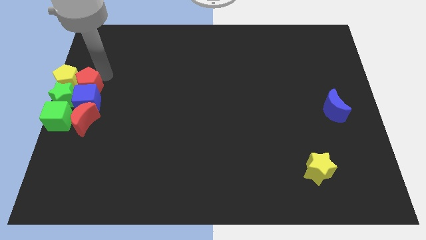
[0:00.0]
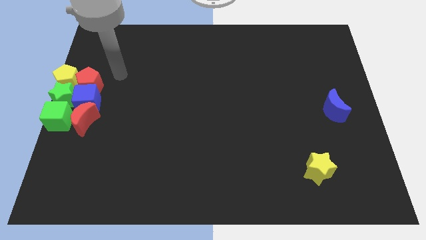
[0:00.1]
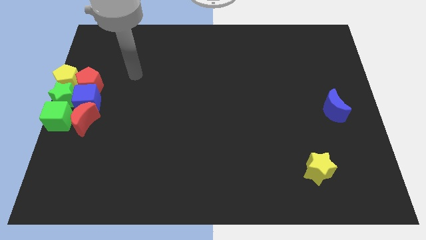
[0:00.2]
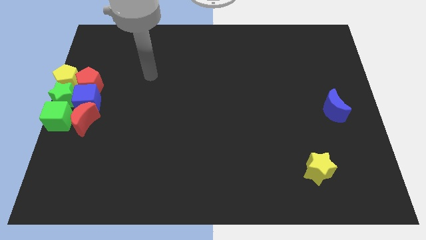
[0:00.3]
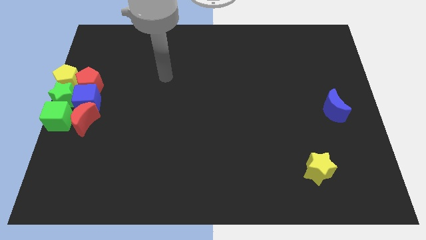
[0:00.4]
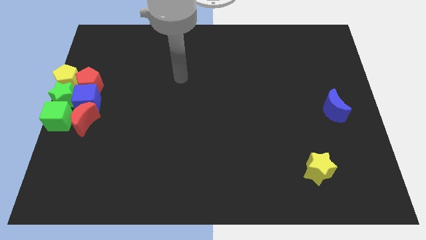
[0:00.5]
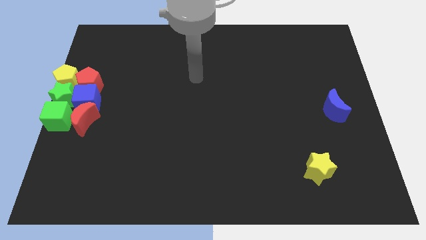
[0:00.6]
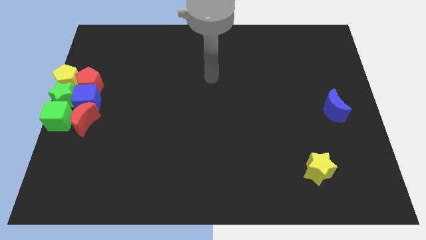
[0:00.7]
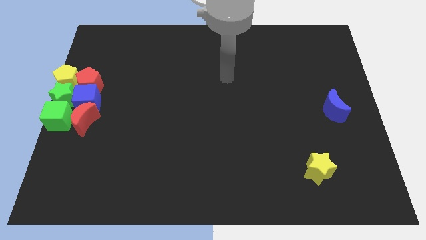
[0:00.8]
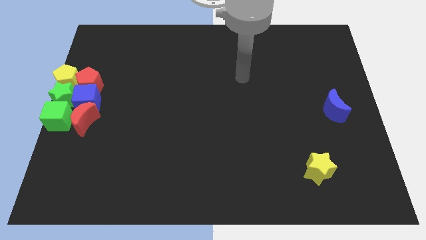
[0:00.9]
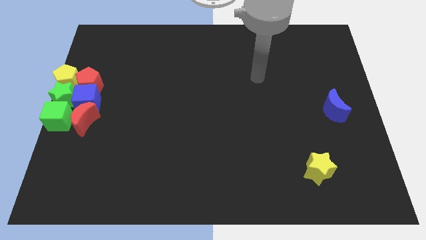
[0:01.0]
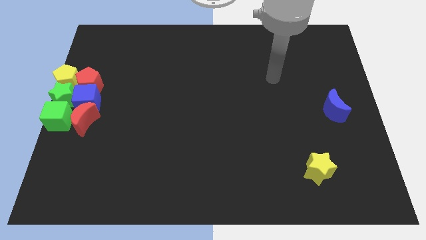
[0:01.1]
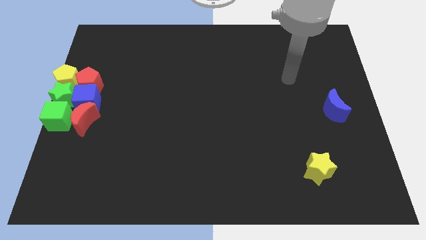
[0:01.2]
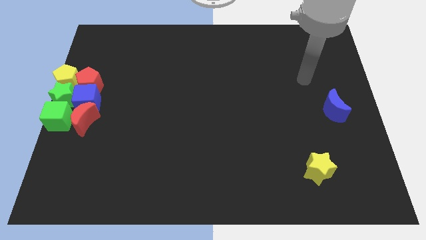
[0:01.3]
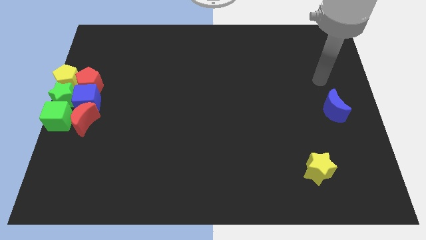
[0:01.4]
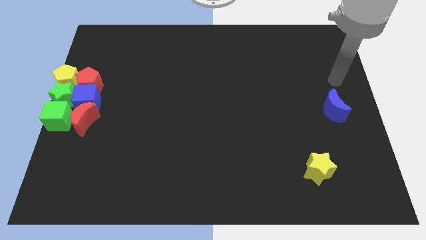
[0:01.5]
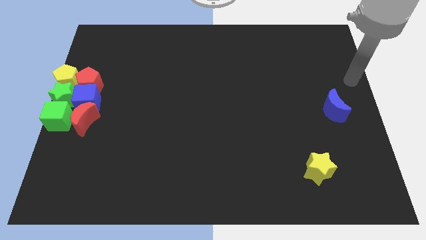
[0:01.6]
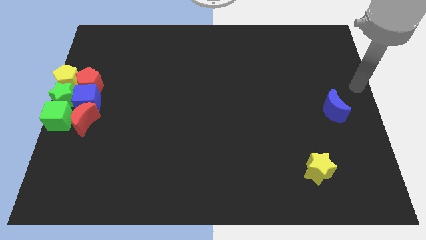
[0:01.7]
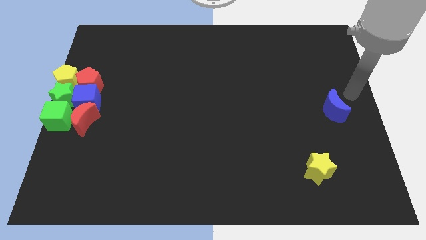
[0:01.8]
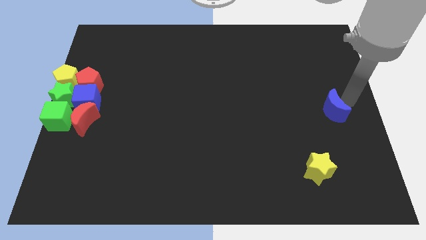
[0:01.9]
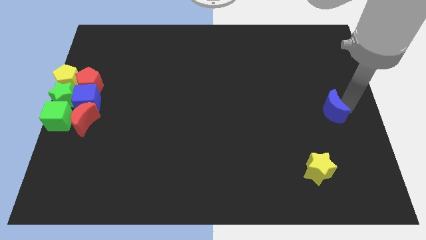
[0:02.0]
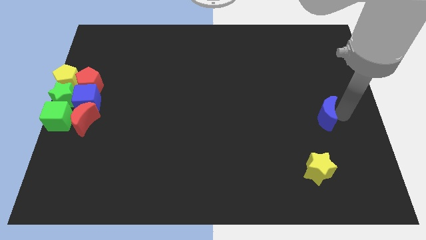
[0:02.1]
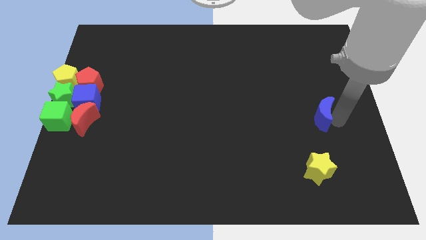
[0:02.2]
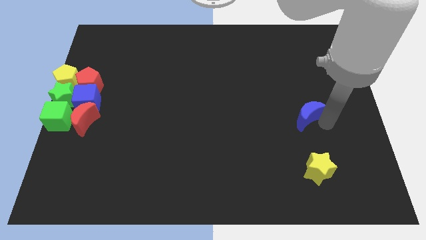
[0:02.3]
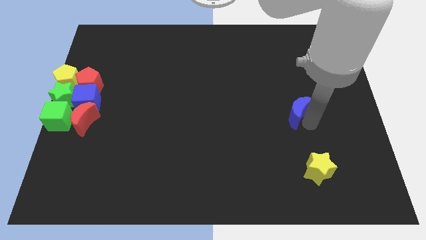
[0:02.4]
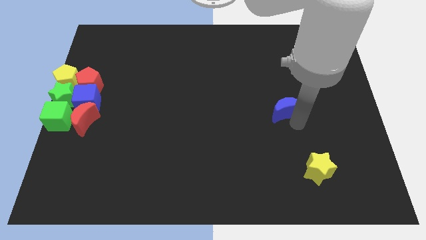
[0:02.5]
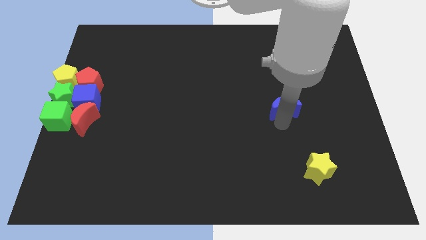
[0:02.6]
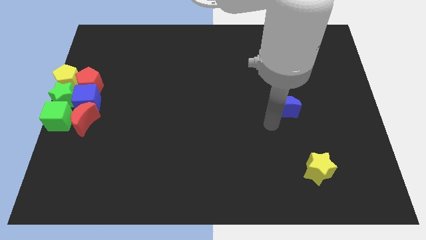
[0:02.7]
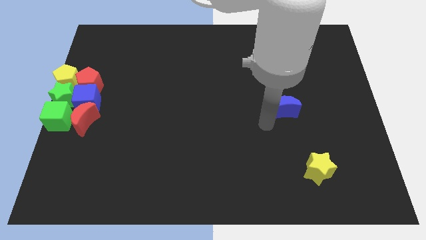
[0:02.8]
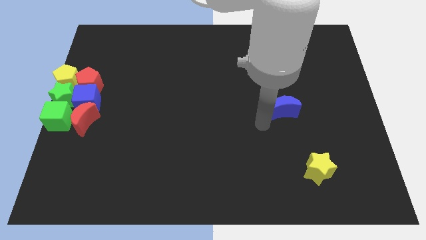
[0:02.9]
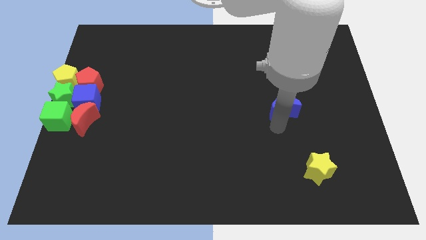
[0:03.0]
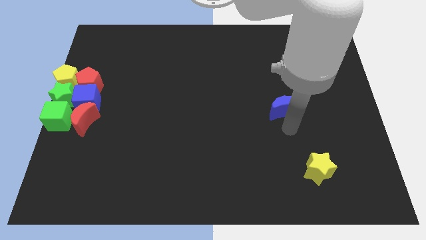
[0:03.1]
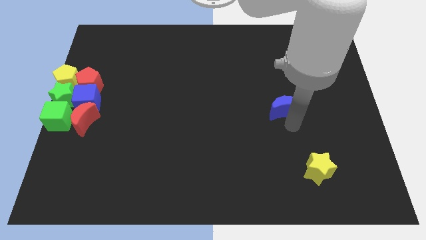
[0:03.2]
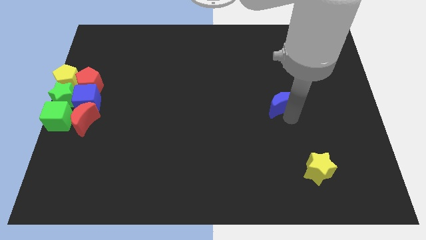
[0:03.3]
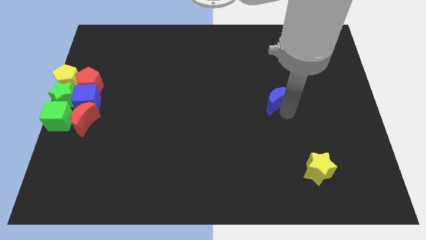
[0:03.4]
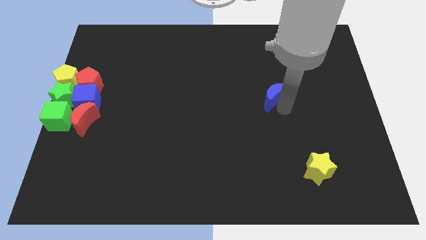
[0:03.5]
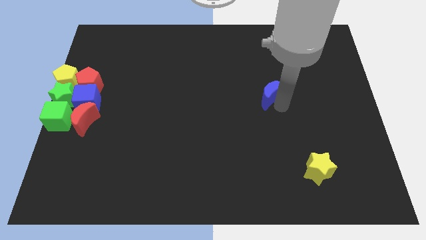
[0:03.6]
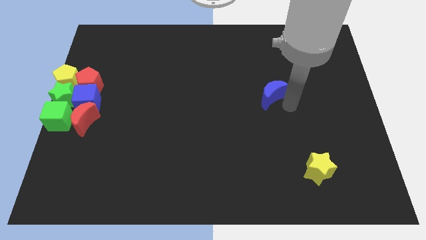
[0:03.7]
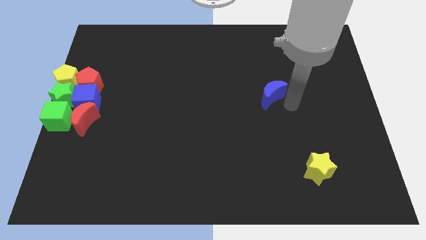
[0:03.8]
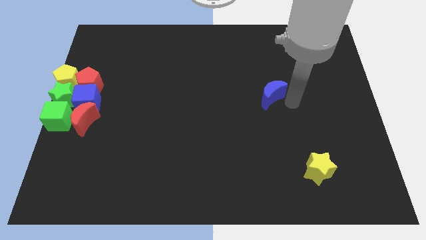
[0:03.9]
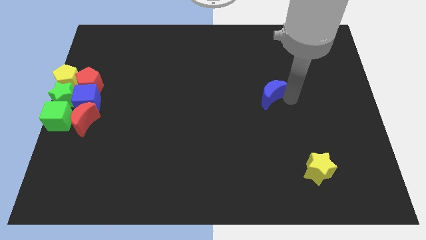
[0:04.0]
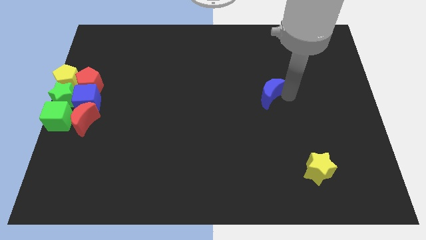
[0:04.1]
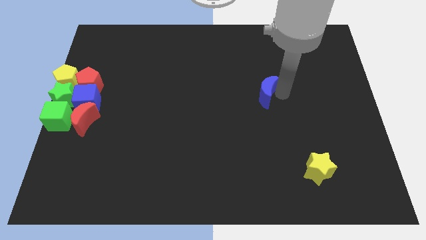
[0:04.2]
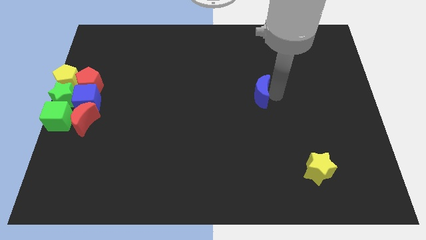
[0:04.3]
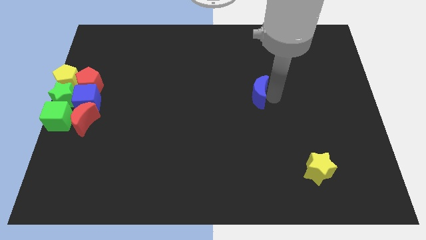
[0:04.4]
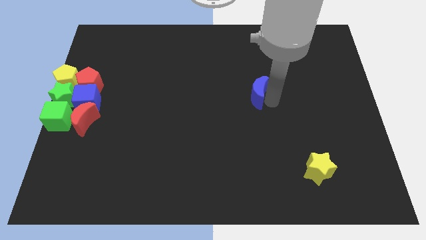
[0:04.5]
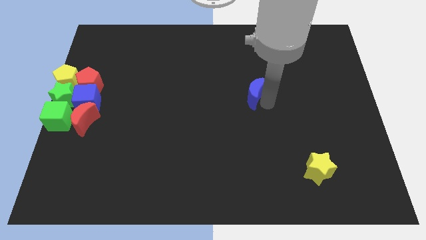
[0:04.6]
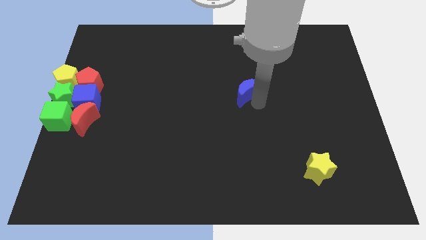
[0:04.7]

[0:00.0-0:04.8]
push the blue crescent towards the center of the table

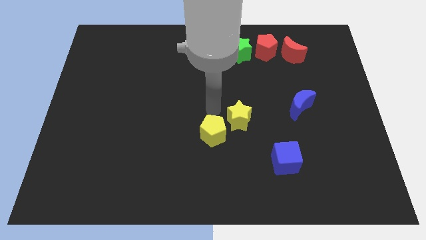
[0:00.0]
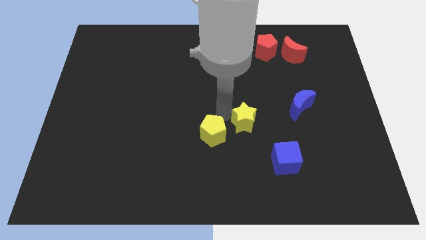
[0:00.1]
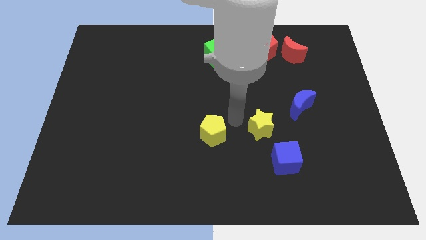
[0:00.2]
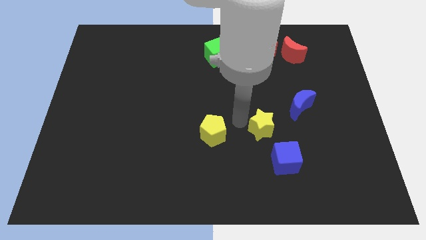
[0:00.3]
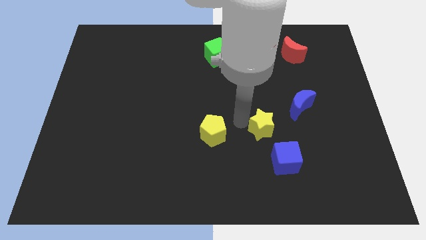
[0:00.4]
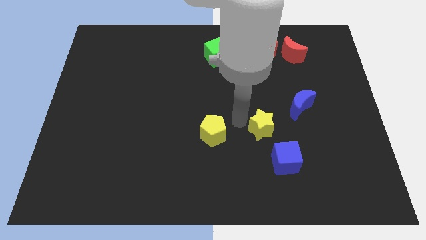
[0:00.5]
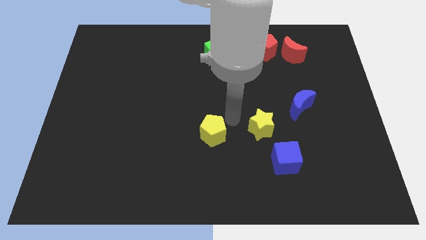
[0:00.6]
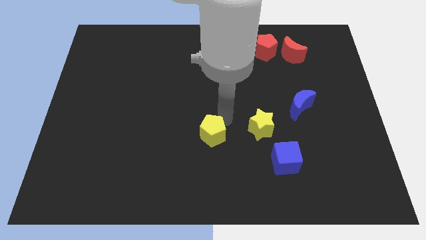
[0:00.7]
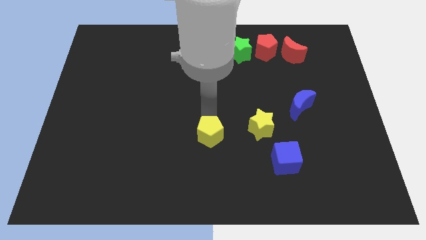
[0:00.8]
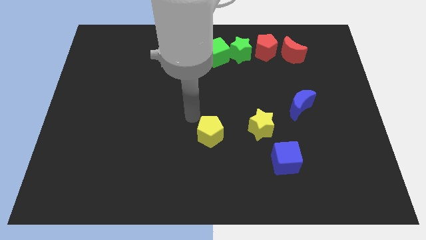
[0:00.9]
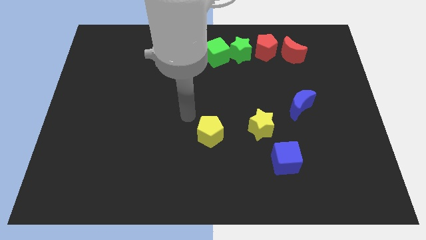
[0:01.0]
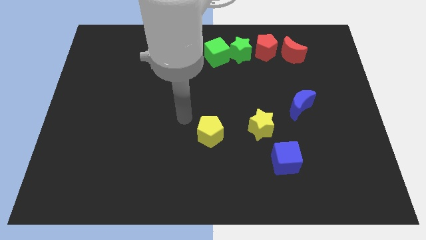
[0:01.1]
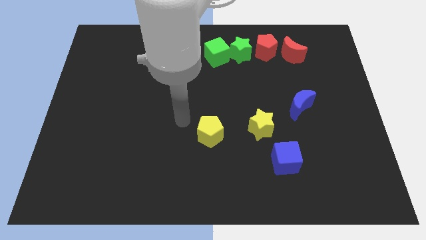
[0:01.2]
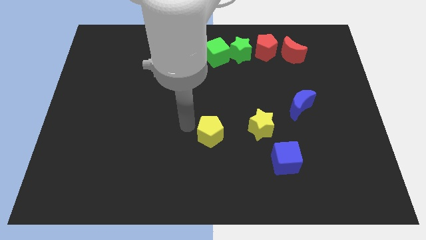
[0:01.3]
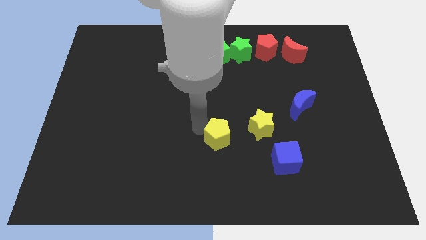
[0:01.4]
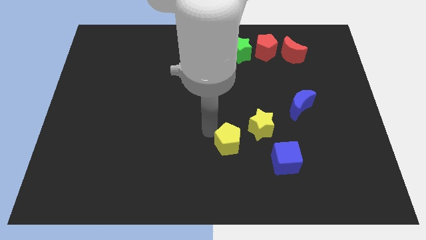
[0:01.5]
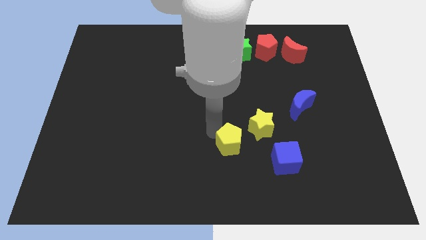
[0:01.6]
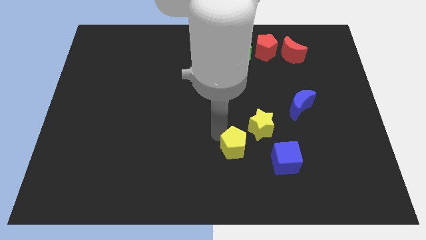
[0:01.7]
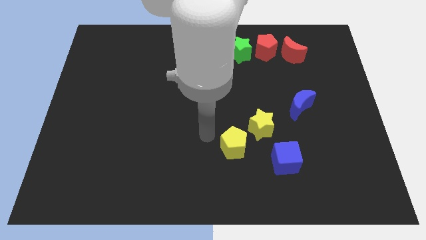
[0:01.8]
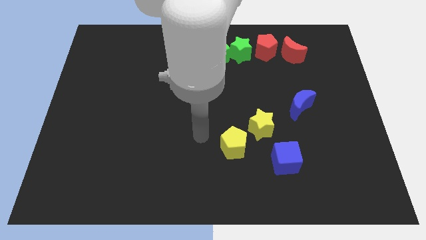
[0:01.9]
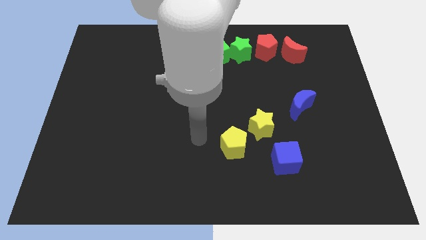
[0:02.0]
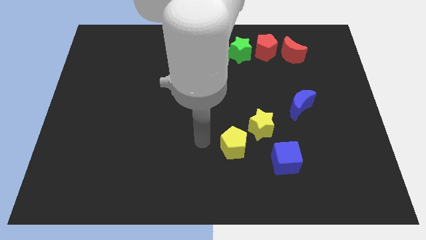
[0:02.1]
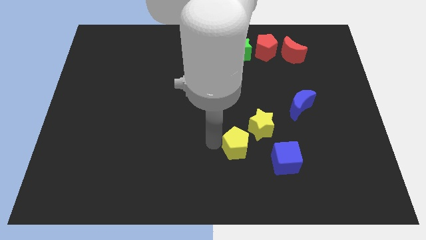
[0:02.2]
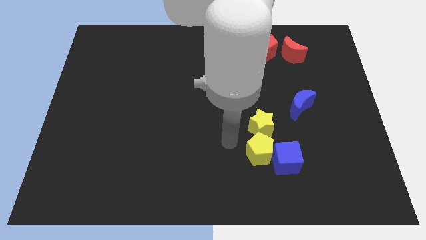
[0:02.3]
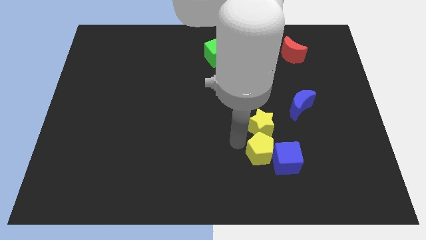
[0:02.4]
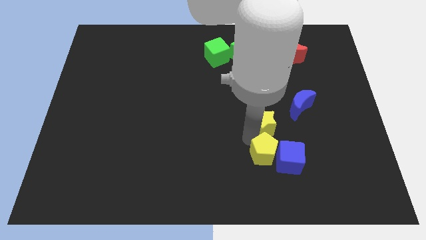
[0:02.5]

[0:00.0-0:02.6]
move the yellow pentagon below yellow star

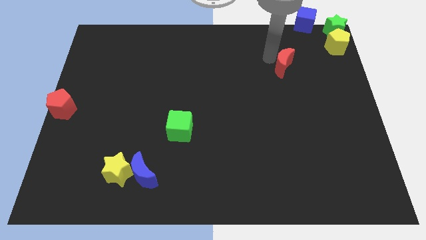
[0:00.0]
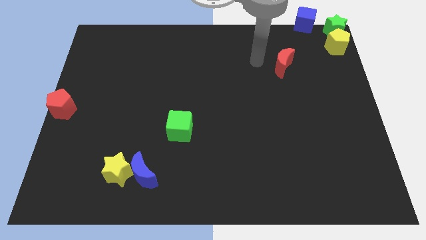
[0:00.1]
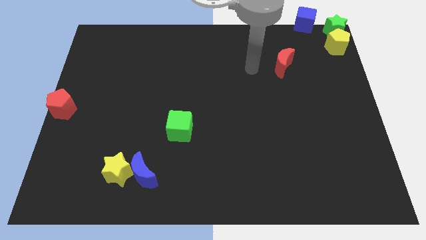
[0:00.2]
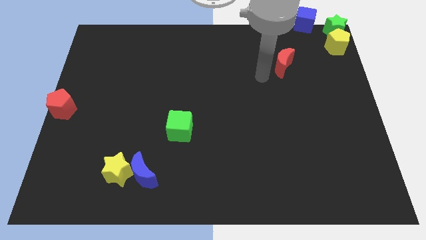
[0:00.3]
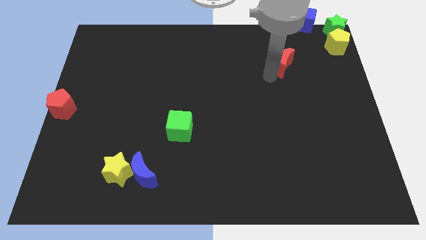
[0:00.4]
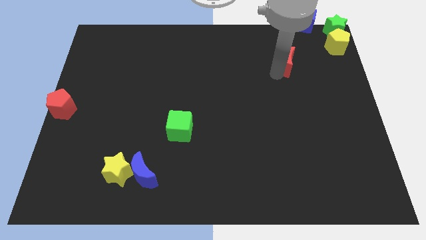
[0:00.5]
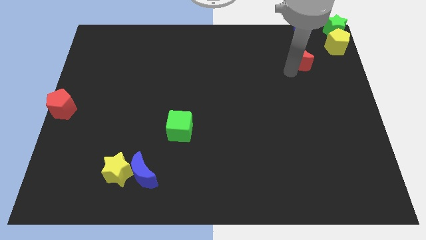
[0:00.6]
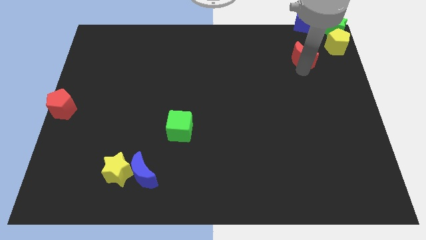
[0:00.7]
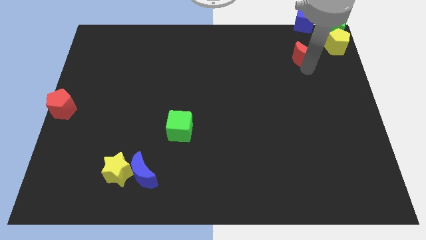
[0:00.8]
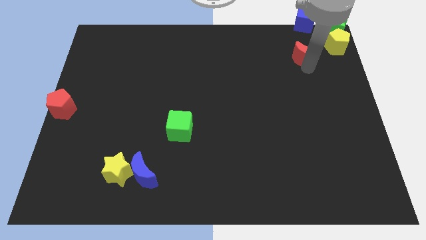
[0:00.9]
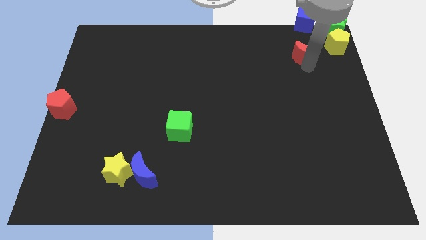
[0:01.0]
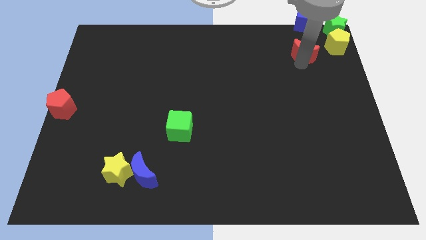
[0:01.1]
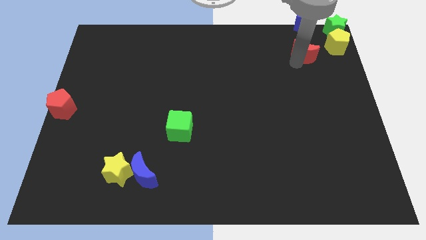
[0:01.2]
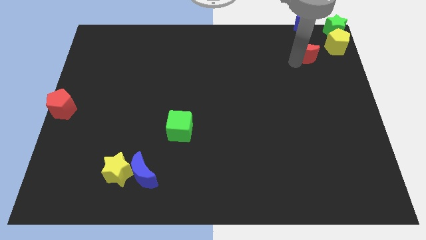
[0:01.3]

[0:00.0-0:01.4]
place the red moon down to the blue cube
